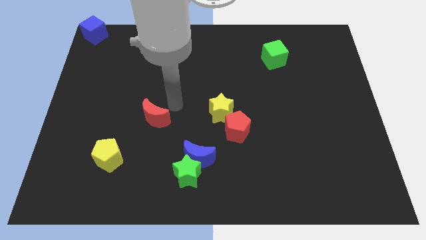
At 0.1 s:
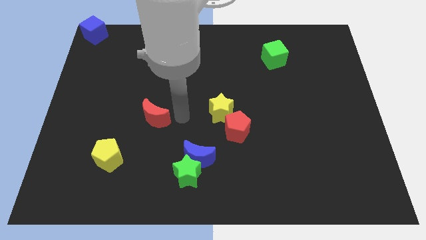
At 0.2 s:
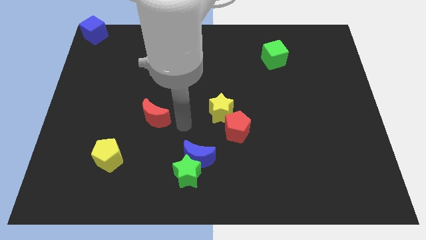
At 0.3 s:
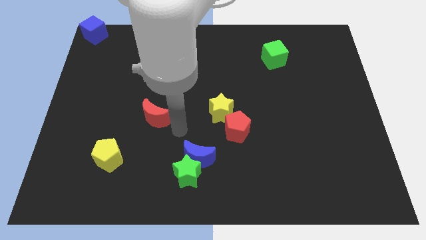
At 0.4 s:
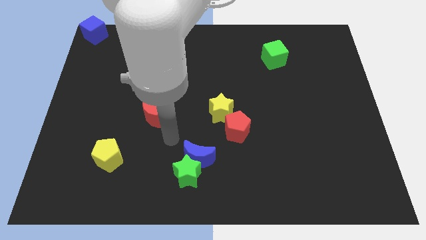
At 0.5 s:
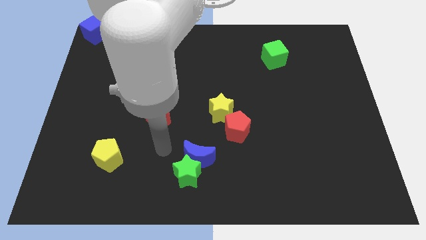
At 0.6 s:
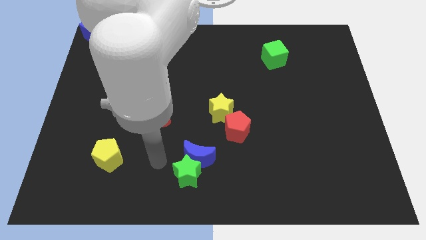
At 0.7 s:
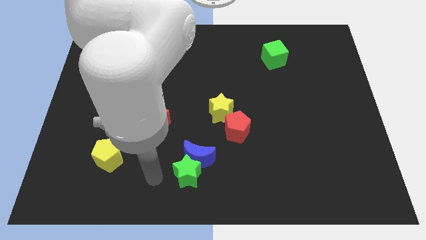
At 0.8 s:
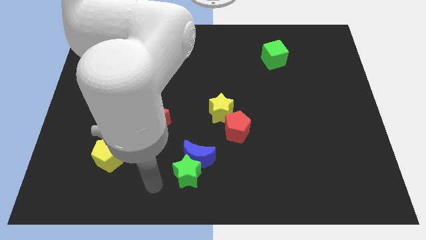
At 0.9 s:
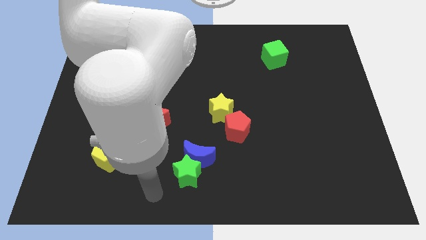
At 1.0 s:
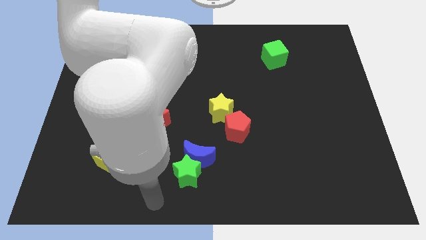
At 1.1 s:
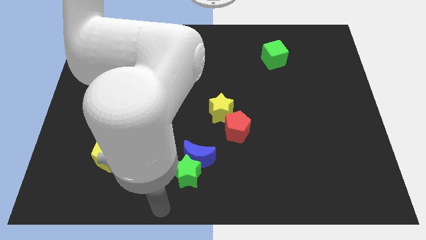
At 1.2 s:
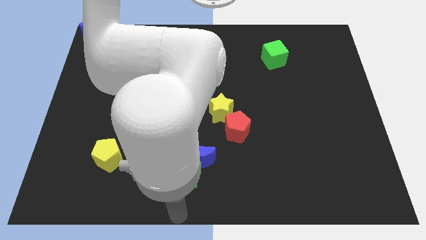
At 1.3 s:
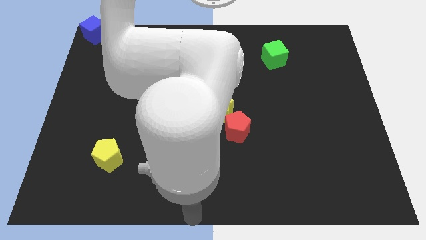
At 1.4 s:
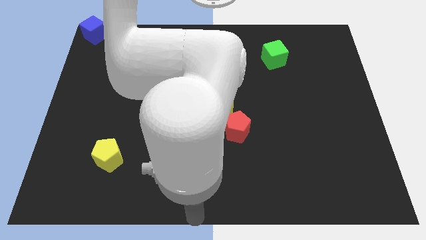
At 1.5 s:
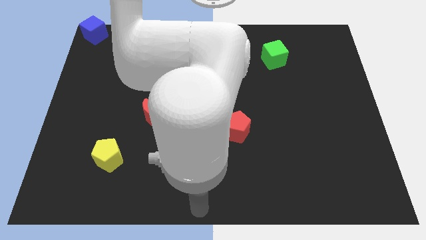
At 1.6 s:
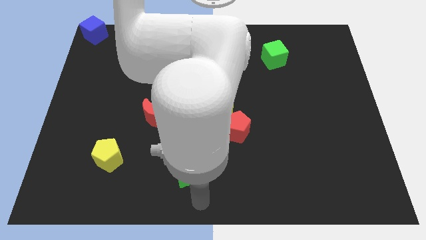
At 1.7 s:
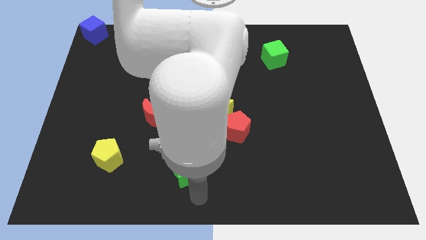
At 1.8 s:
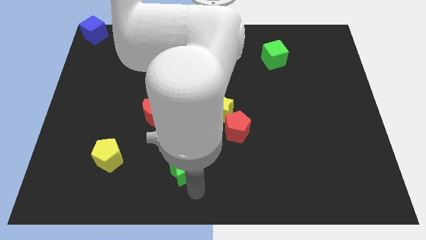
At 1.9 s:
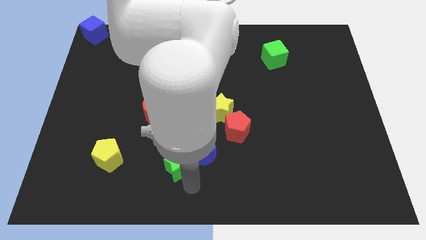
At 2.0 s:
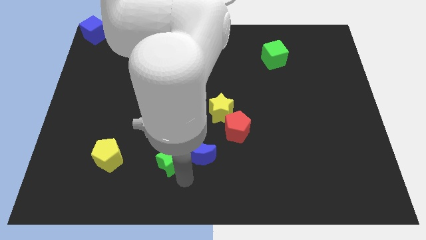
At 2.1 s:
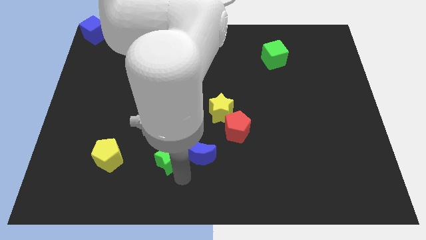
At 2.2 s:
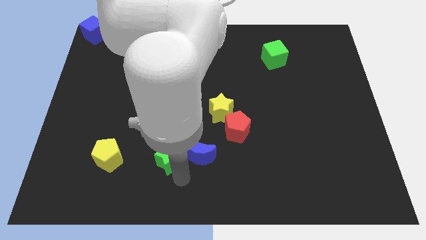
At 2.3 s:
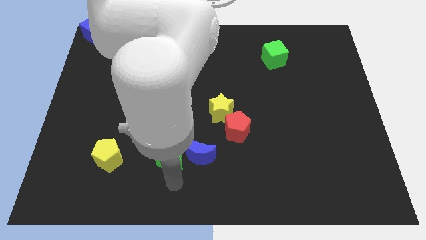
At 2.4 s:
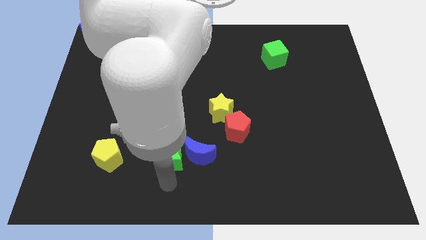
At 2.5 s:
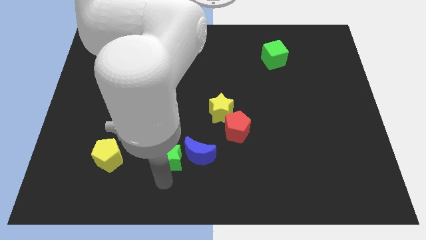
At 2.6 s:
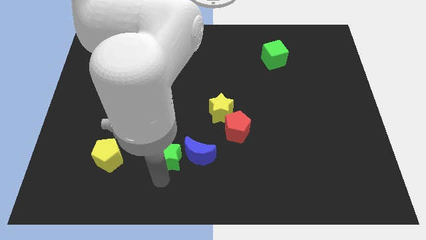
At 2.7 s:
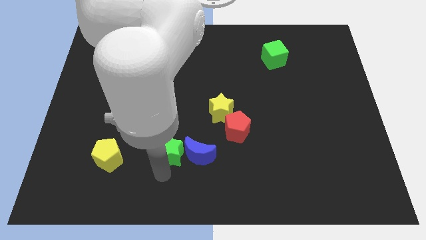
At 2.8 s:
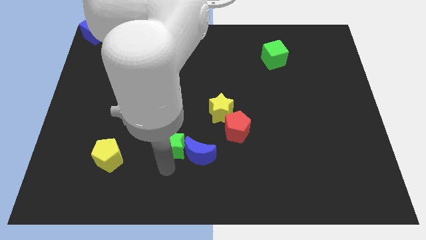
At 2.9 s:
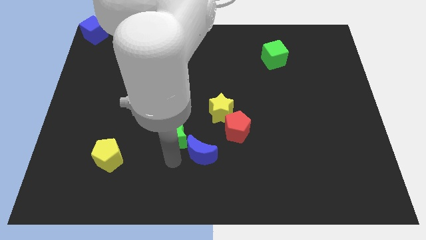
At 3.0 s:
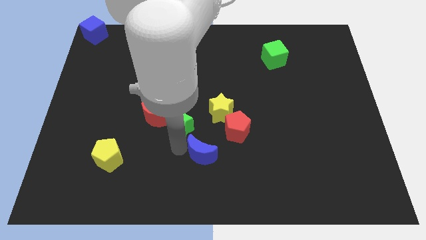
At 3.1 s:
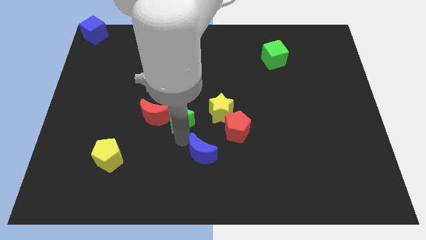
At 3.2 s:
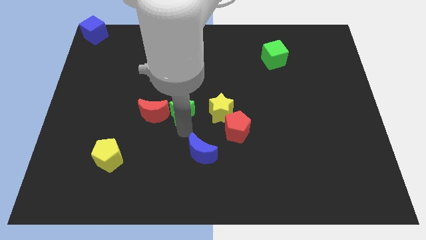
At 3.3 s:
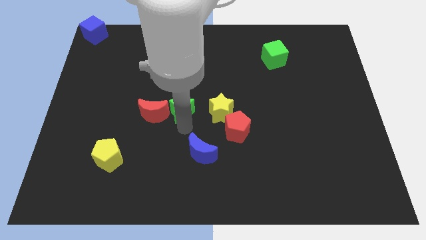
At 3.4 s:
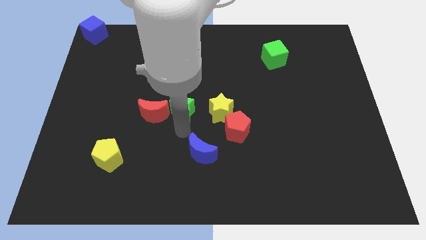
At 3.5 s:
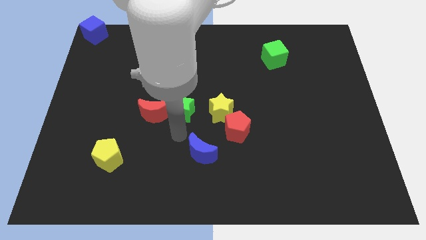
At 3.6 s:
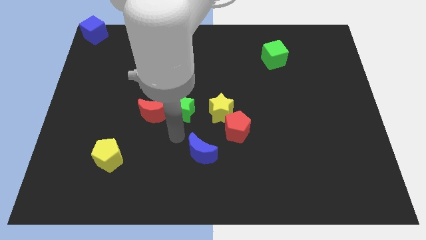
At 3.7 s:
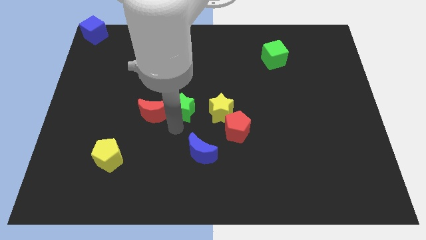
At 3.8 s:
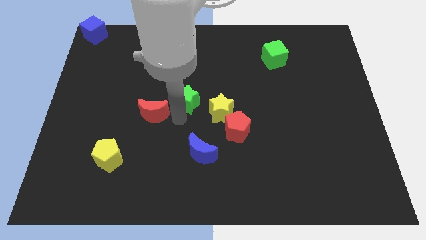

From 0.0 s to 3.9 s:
place green star beside red moon

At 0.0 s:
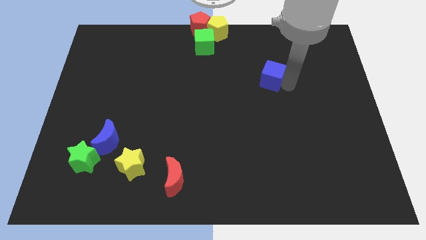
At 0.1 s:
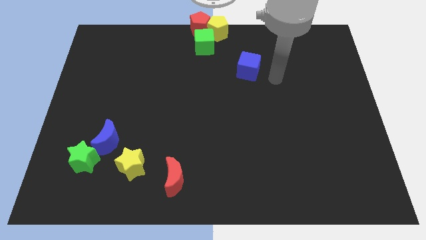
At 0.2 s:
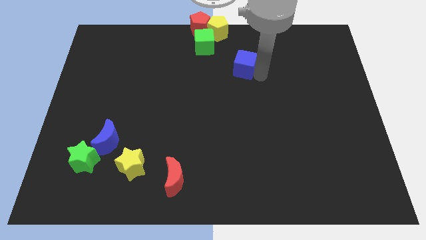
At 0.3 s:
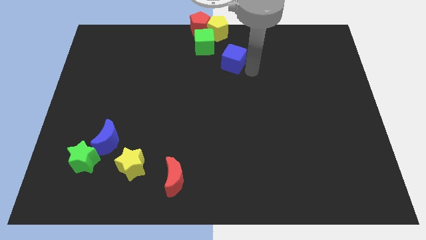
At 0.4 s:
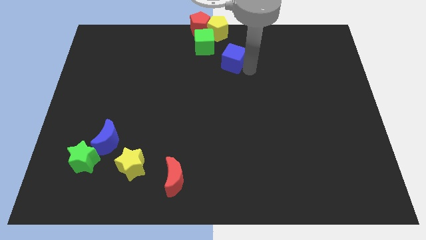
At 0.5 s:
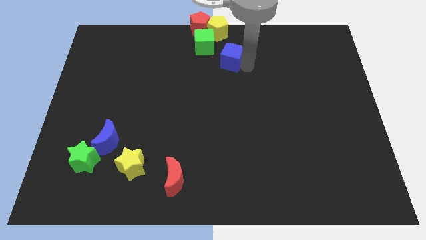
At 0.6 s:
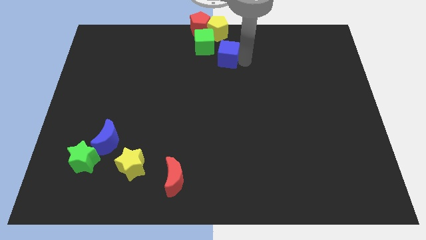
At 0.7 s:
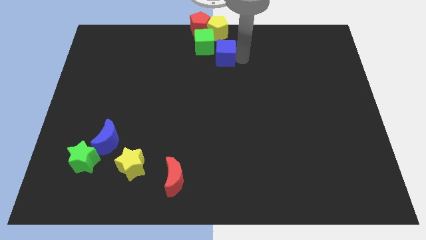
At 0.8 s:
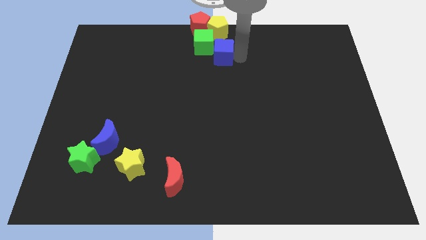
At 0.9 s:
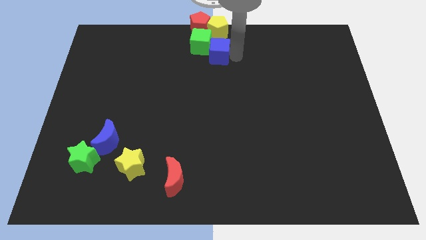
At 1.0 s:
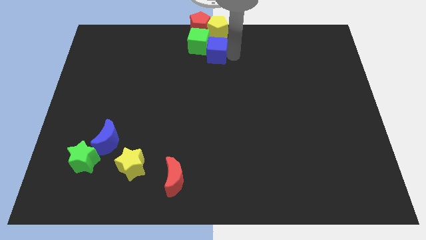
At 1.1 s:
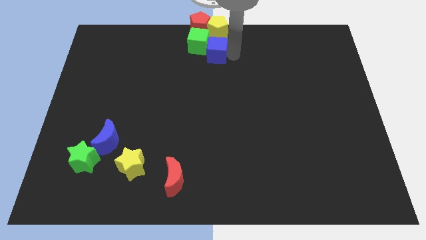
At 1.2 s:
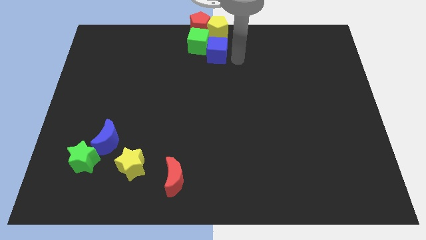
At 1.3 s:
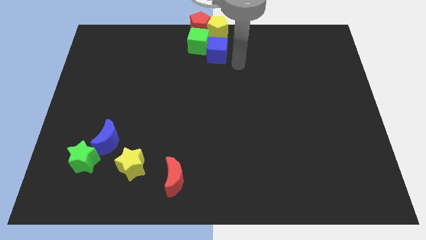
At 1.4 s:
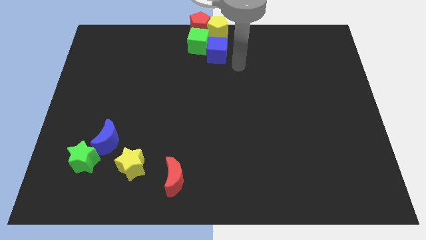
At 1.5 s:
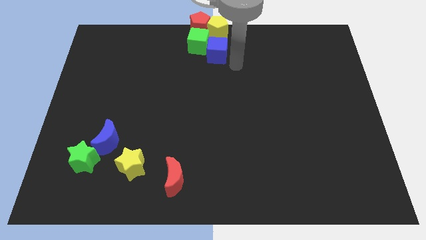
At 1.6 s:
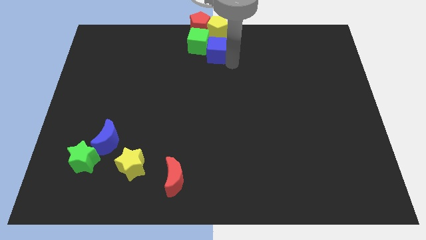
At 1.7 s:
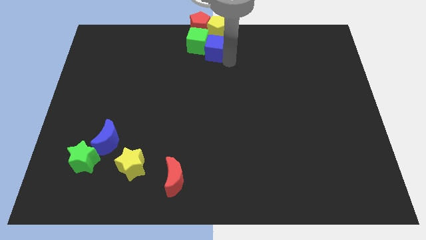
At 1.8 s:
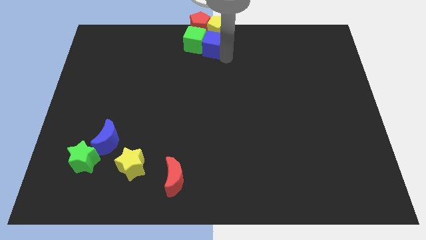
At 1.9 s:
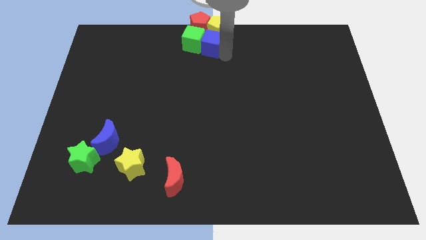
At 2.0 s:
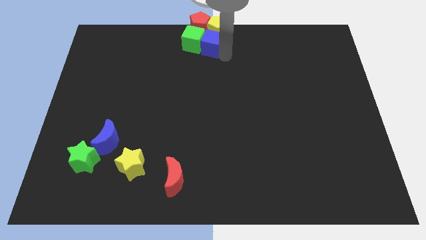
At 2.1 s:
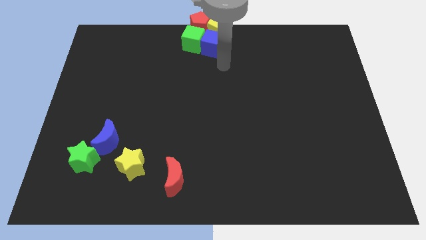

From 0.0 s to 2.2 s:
slide the blue cube into the green cube and yellow pentagon

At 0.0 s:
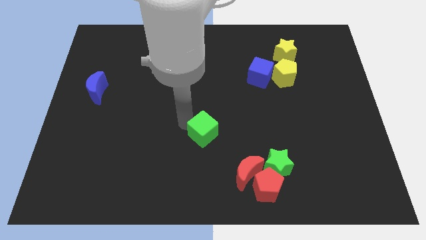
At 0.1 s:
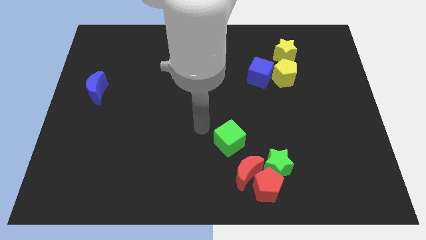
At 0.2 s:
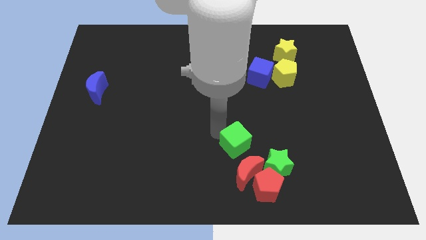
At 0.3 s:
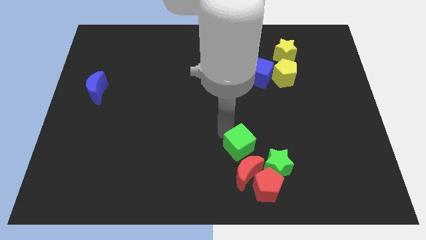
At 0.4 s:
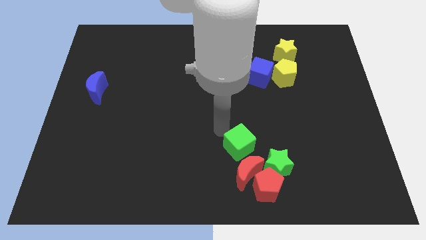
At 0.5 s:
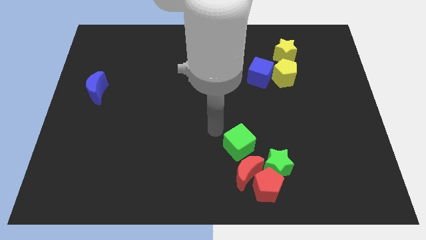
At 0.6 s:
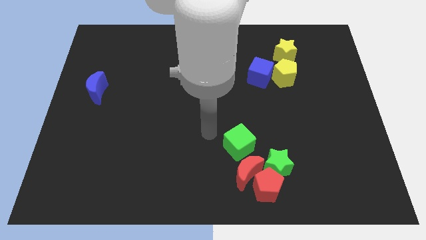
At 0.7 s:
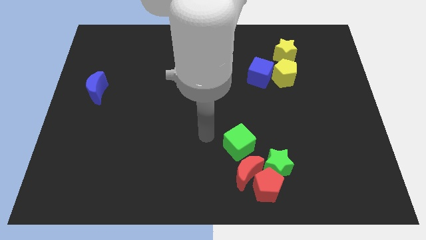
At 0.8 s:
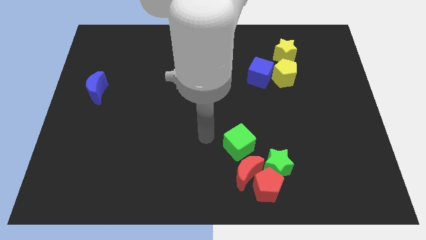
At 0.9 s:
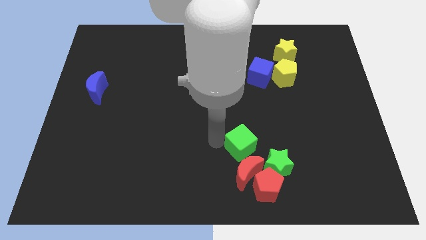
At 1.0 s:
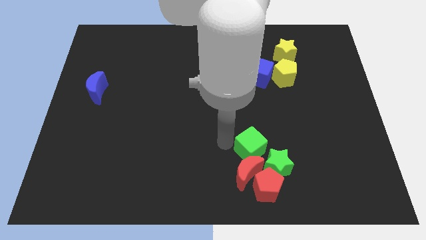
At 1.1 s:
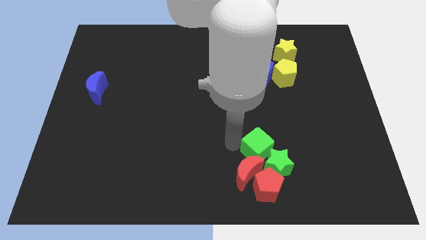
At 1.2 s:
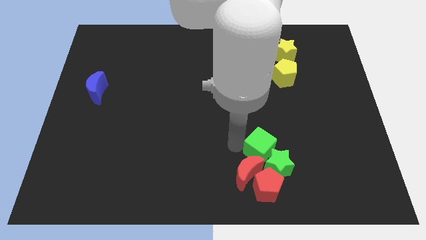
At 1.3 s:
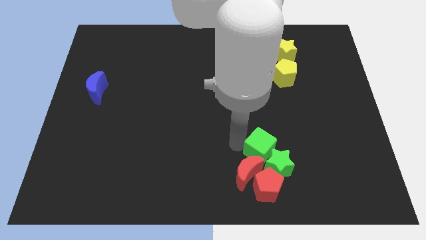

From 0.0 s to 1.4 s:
add green cube to the both red blocks and green star

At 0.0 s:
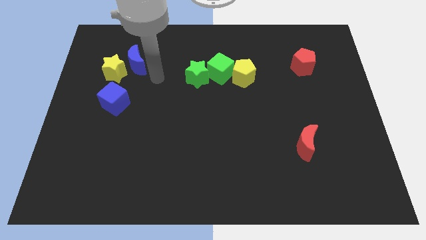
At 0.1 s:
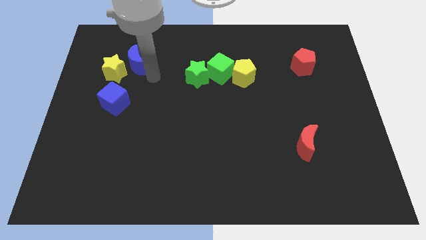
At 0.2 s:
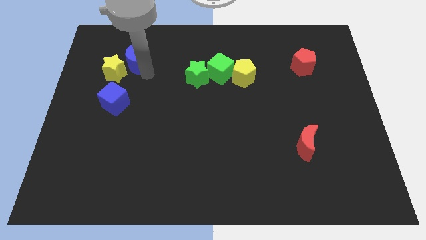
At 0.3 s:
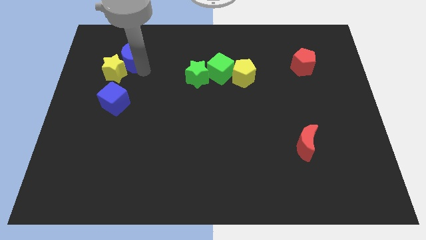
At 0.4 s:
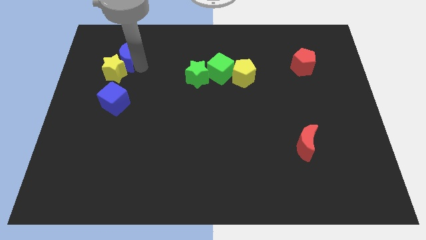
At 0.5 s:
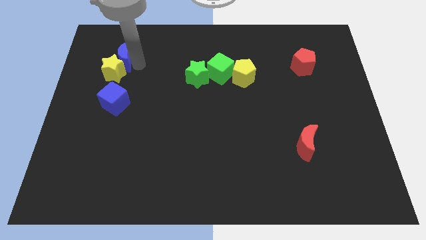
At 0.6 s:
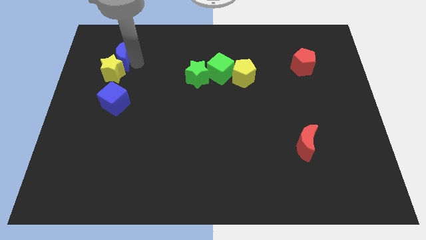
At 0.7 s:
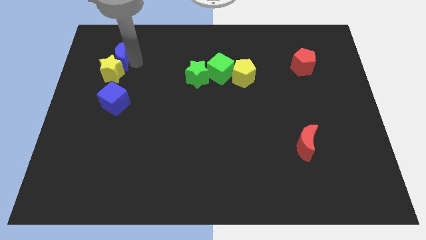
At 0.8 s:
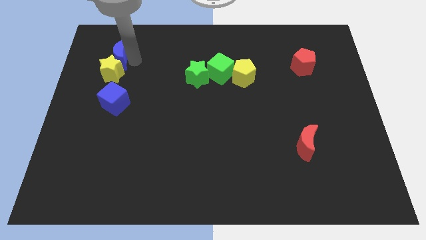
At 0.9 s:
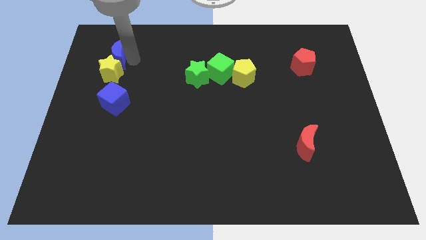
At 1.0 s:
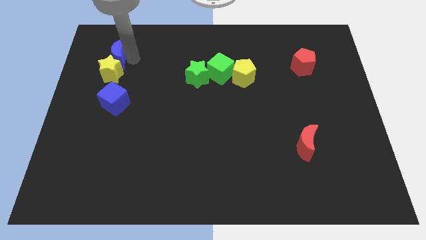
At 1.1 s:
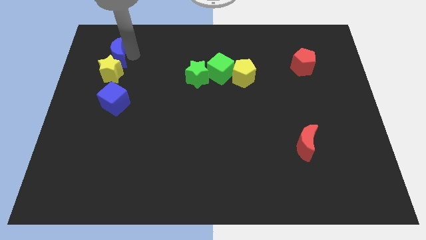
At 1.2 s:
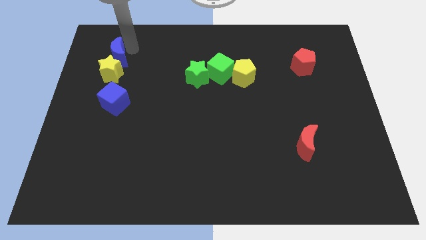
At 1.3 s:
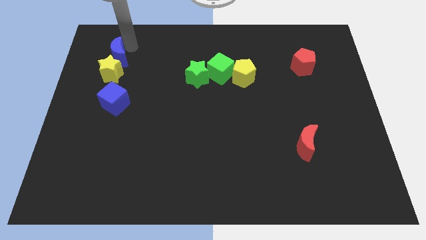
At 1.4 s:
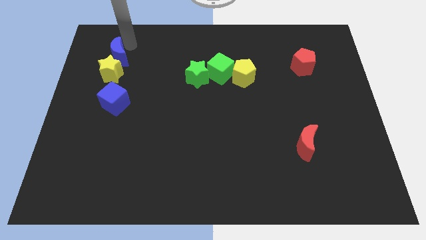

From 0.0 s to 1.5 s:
push the blue crescent above to the yellow star
